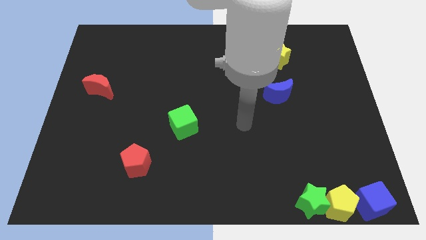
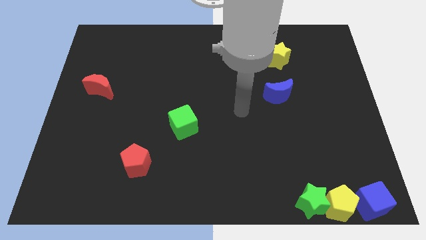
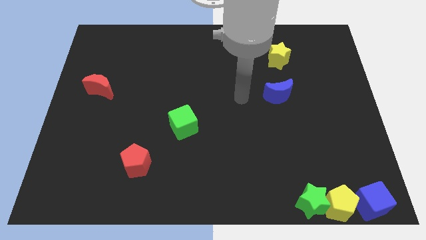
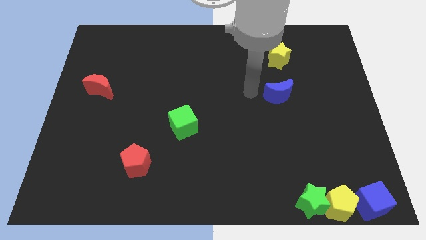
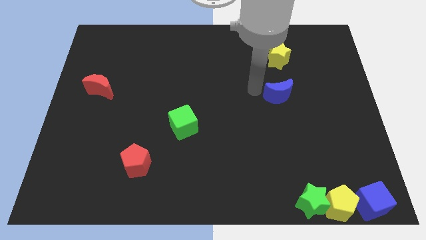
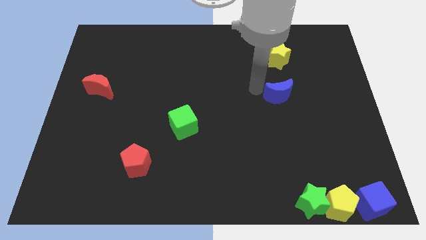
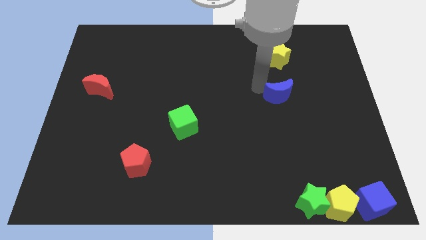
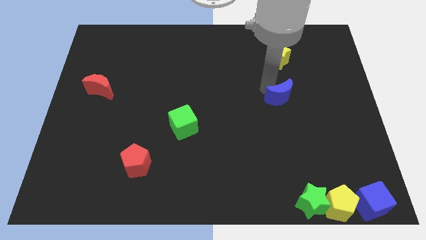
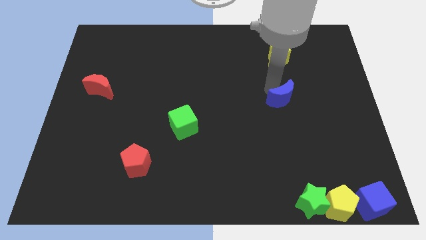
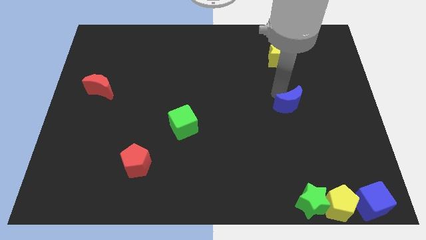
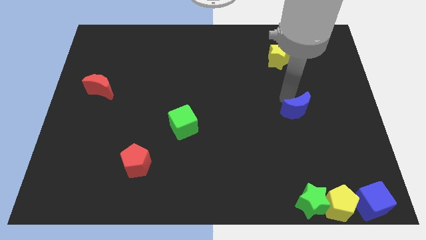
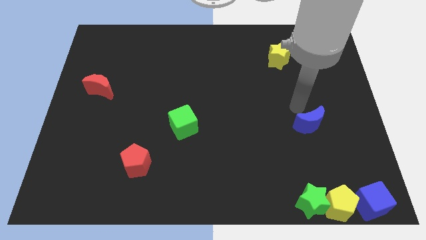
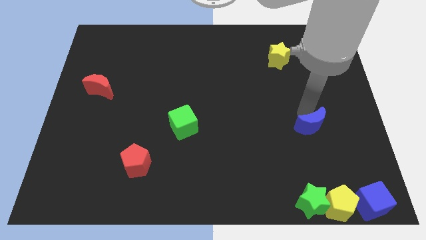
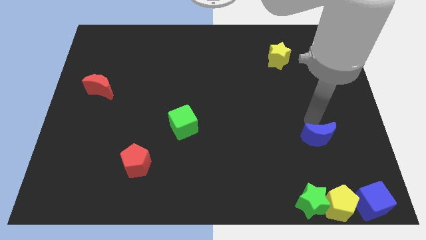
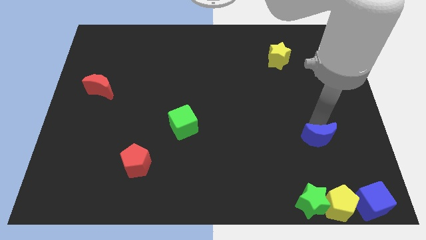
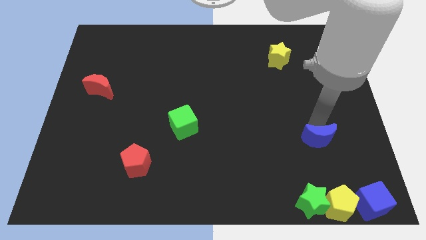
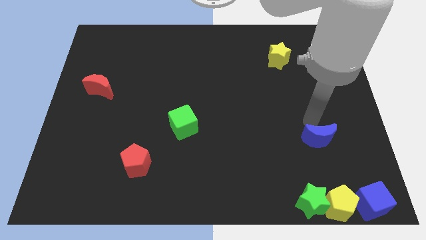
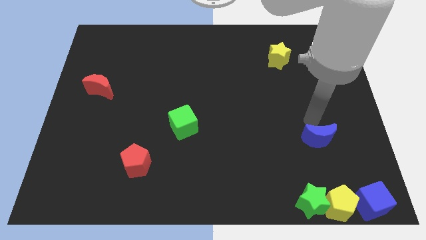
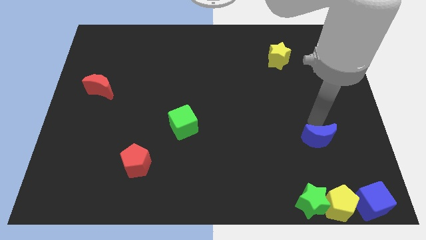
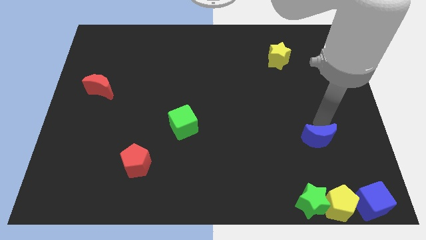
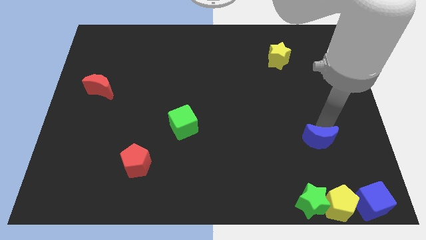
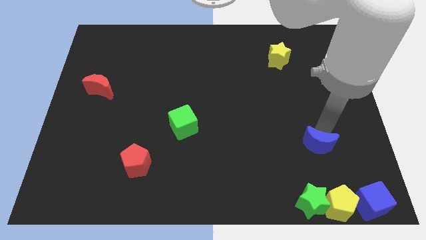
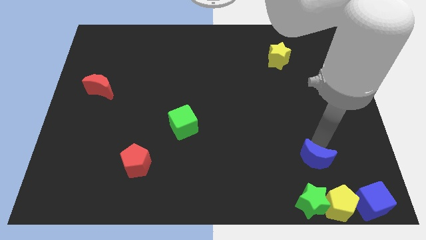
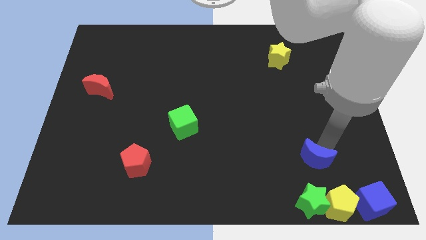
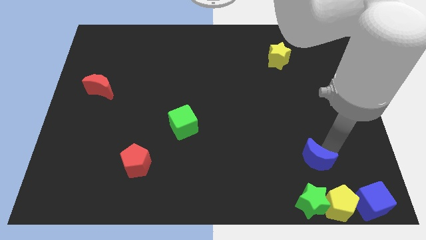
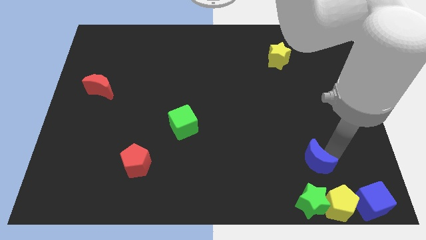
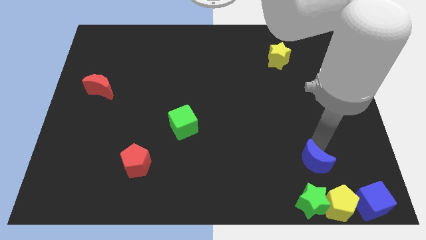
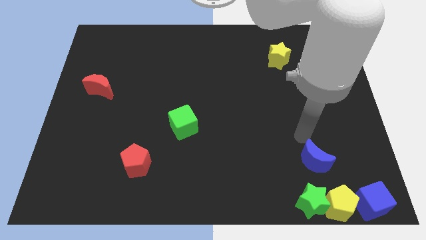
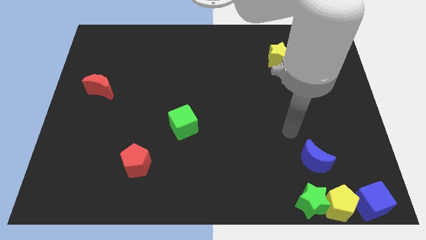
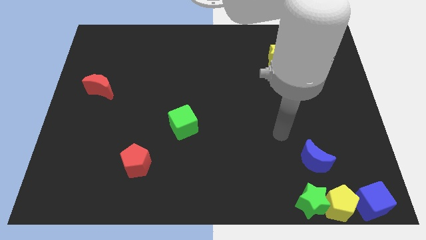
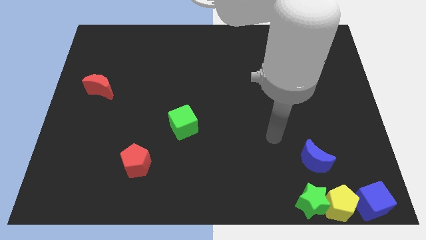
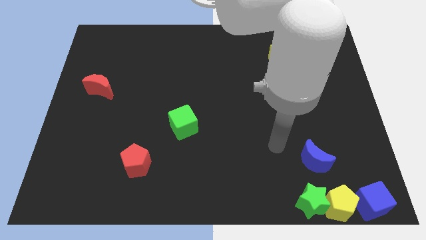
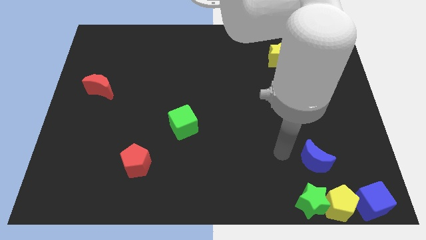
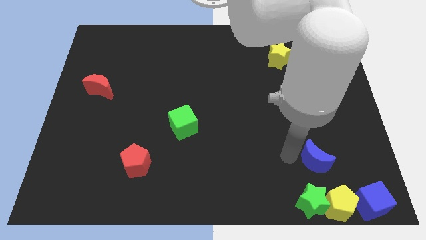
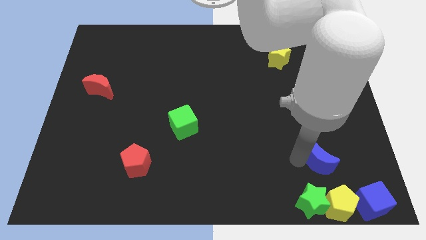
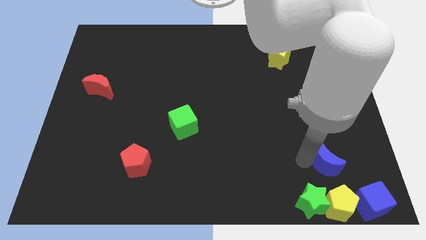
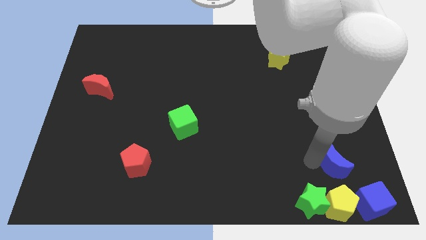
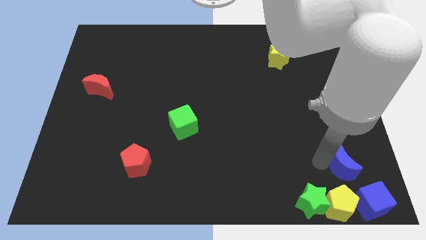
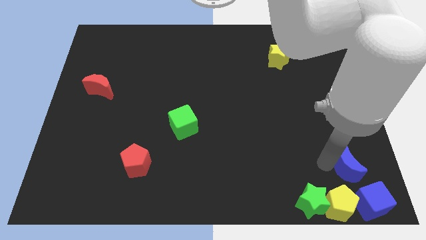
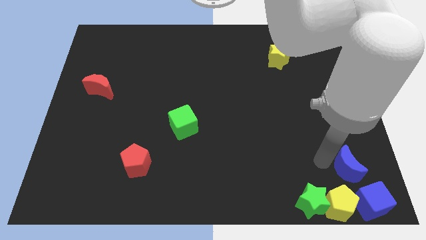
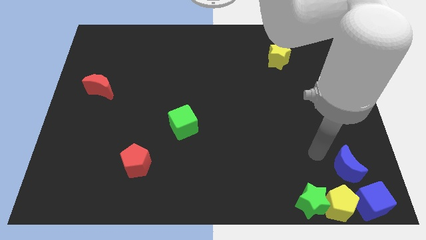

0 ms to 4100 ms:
slide the blue crescent towards the blue cube

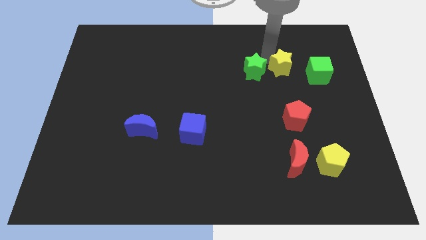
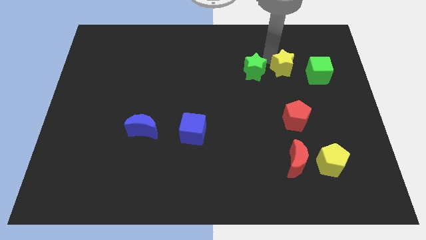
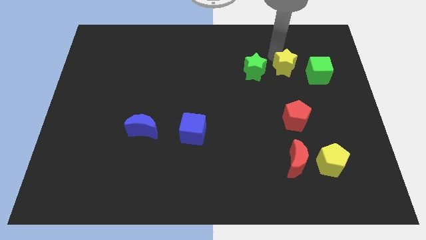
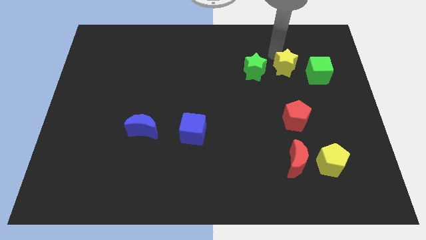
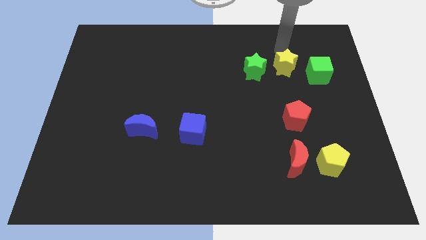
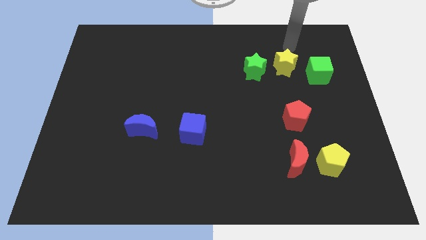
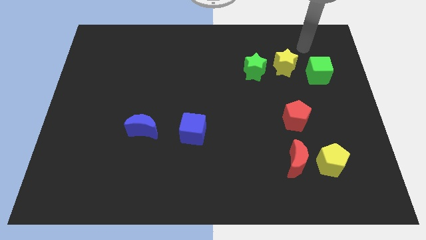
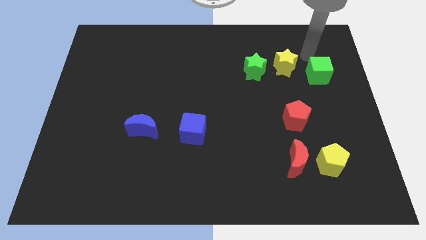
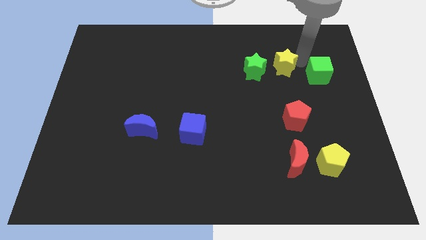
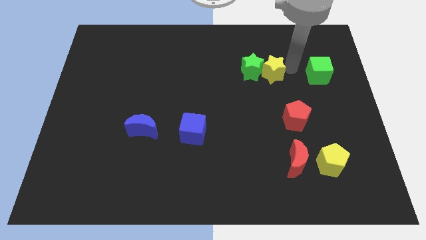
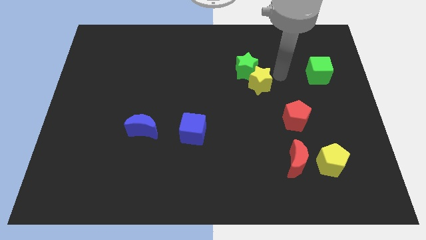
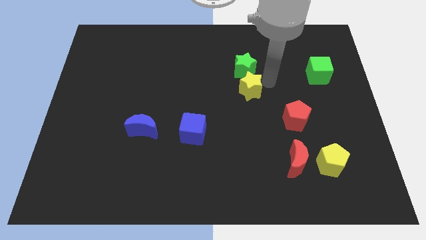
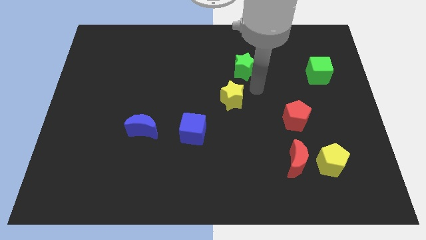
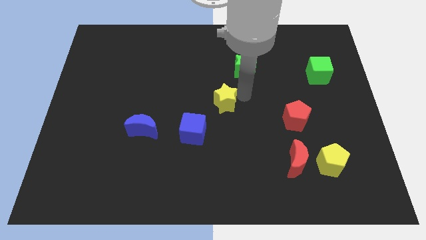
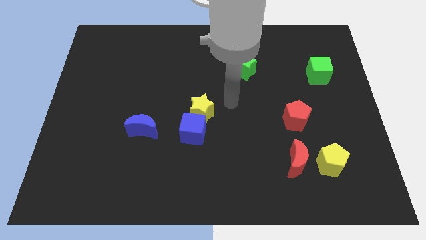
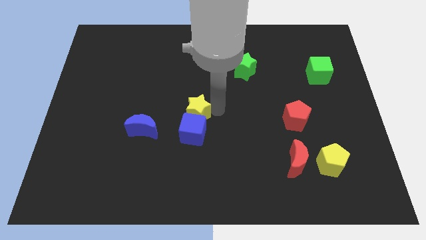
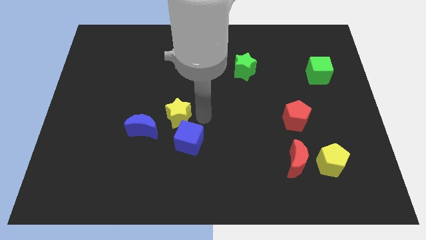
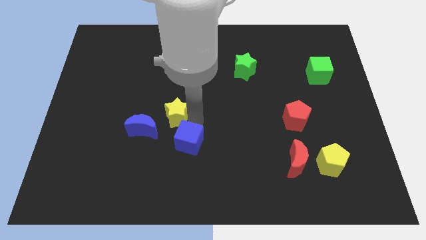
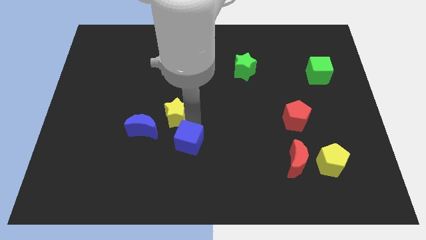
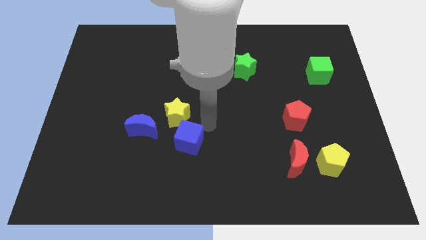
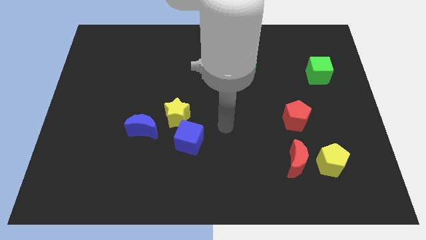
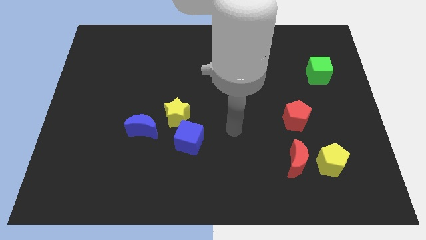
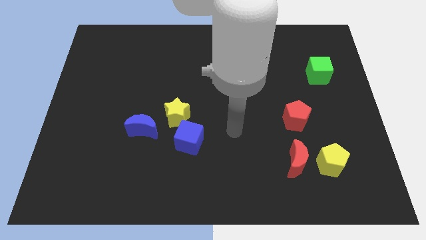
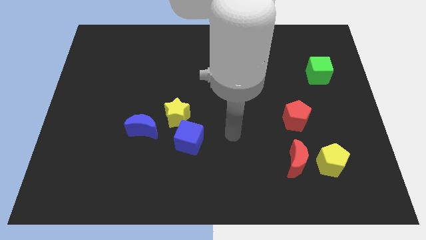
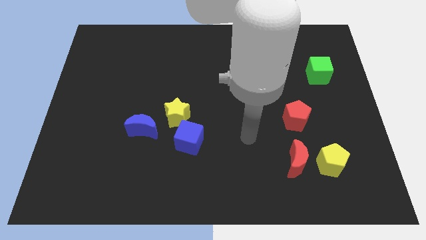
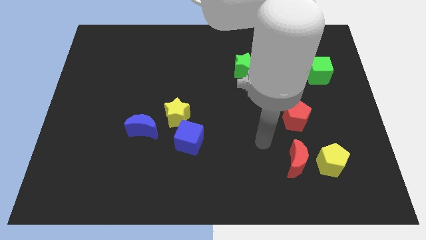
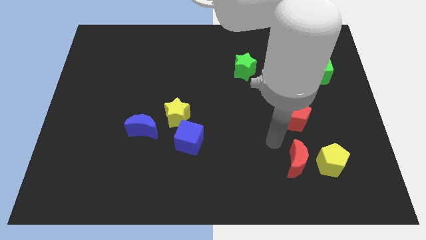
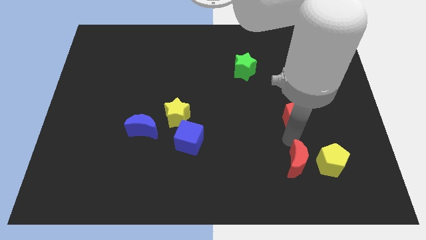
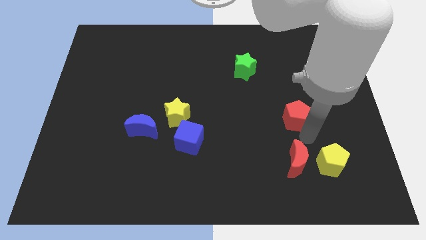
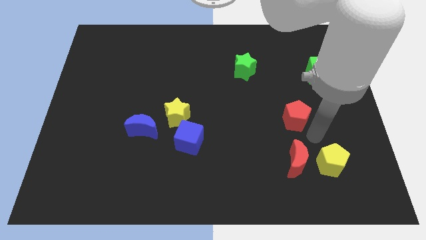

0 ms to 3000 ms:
push the yellow star to the top right of the blue crescent

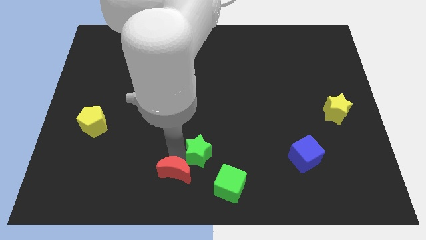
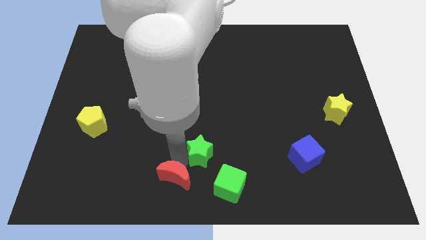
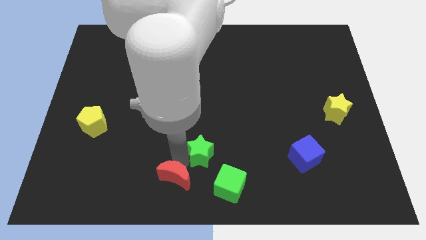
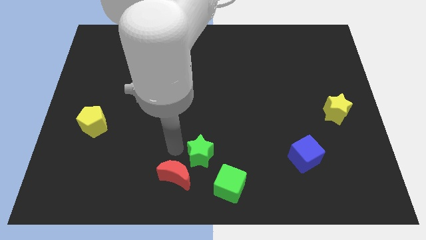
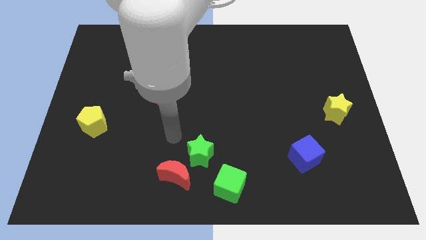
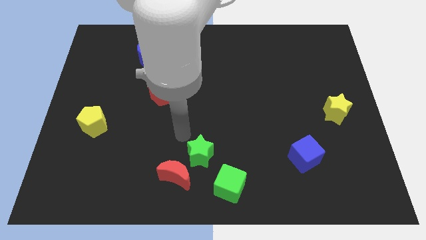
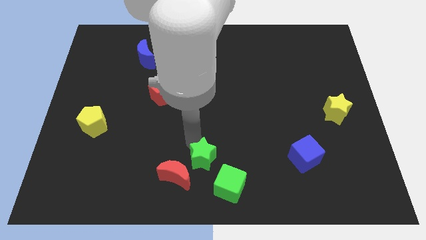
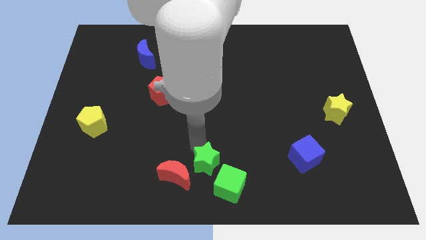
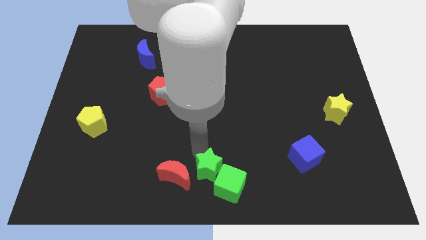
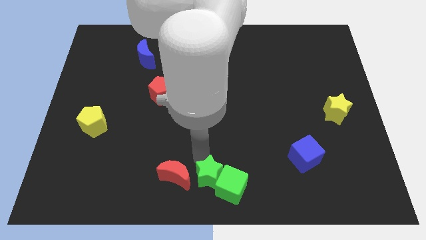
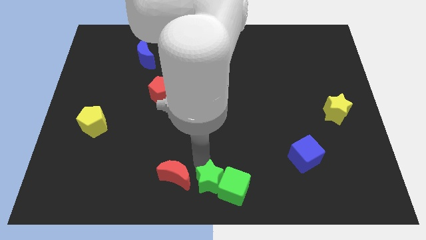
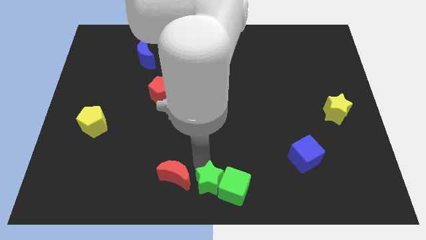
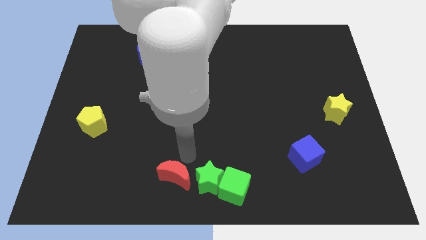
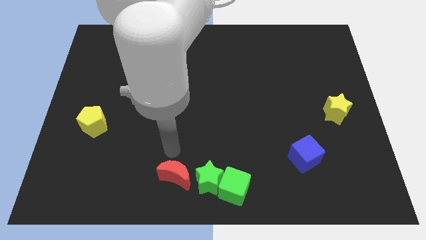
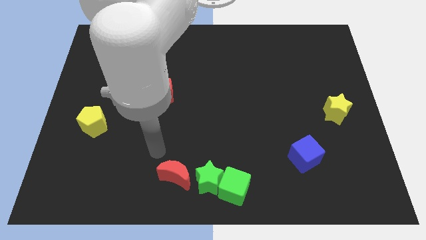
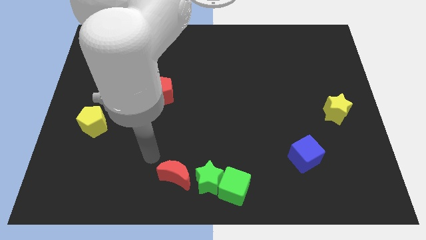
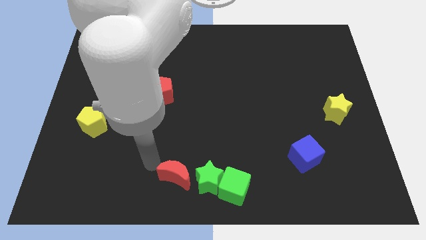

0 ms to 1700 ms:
move the green star into the green cube
